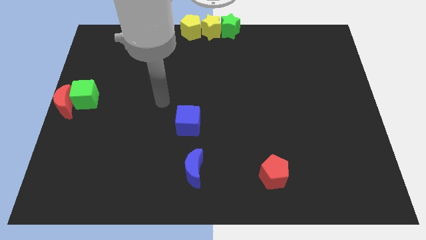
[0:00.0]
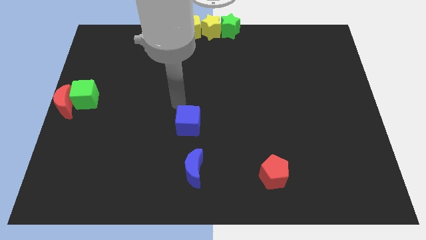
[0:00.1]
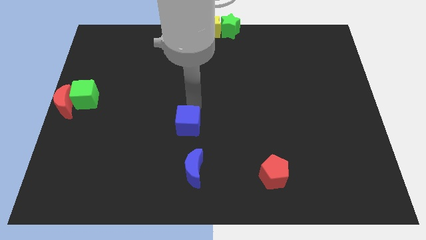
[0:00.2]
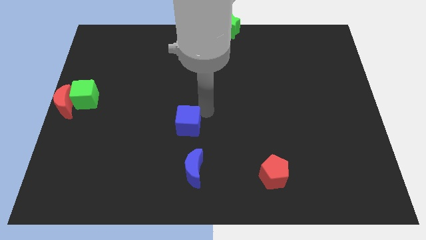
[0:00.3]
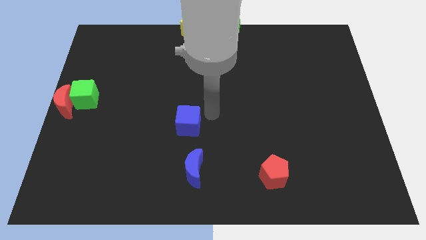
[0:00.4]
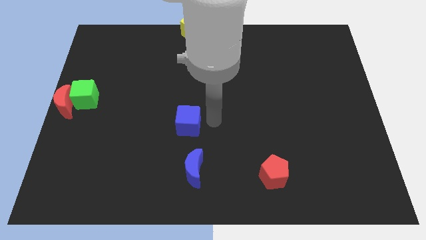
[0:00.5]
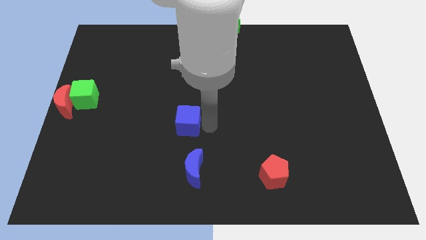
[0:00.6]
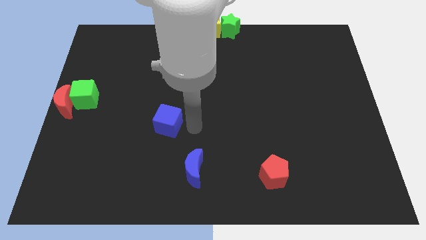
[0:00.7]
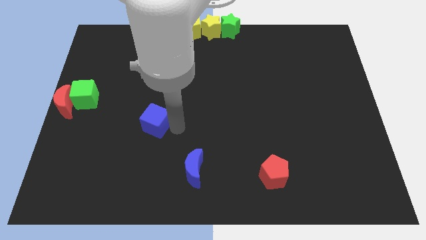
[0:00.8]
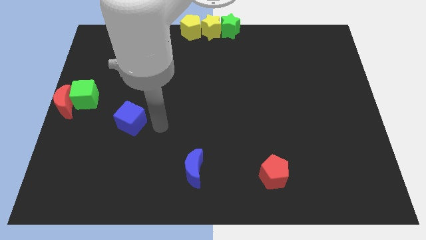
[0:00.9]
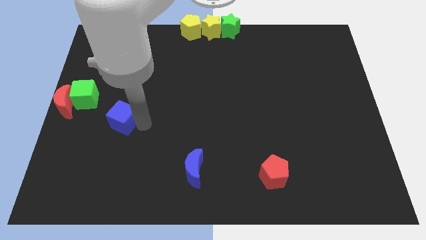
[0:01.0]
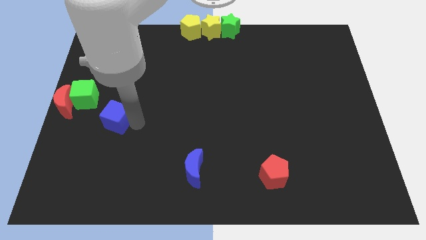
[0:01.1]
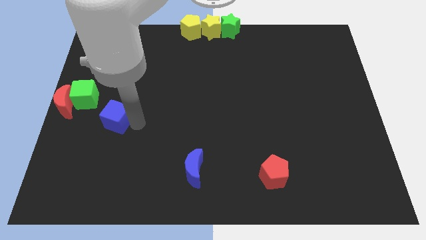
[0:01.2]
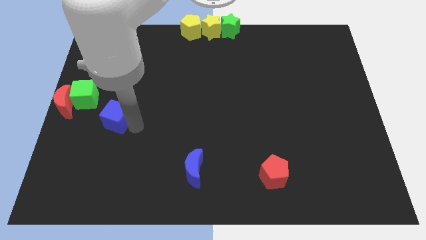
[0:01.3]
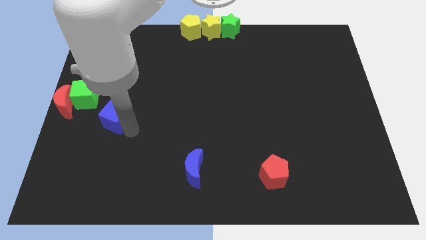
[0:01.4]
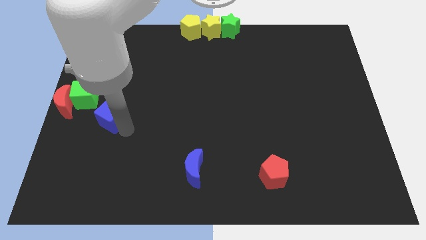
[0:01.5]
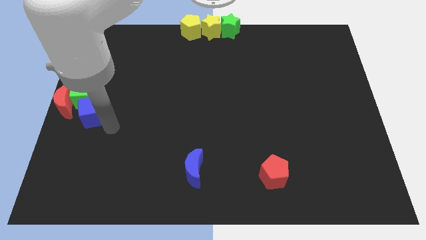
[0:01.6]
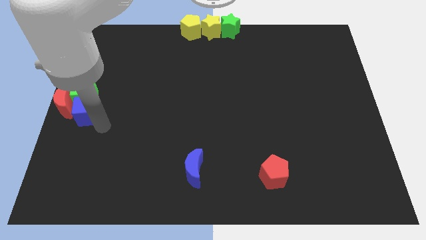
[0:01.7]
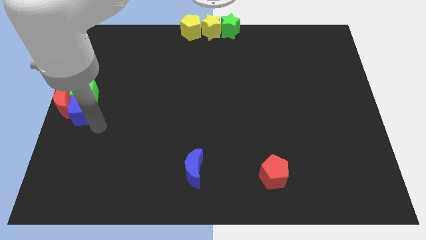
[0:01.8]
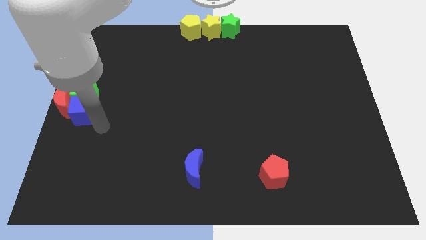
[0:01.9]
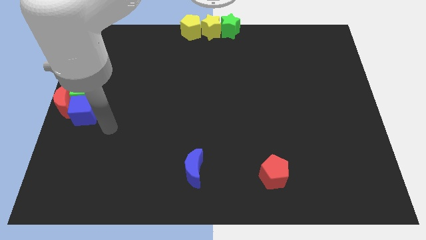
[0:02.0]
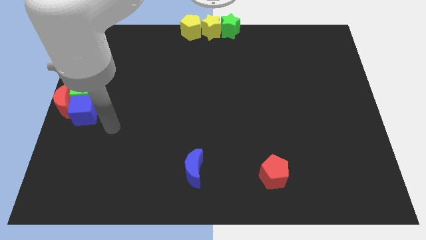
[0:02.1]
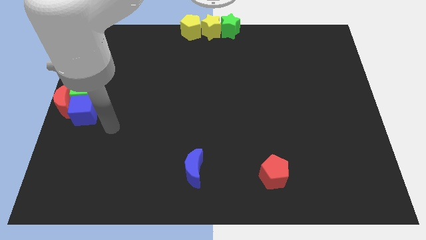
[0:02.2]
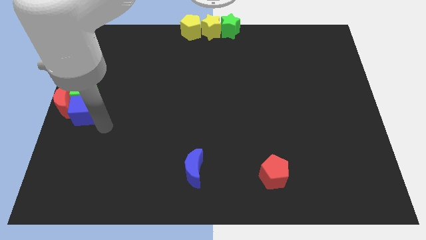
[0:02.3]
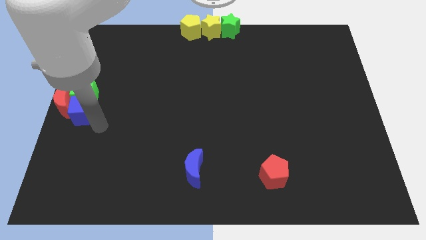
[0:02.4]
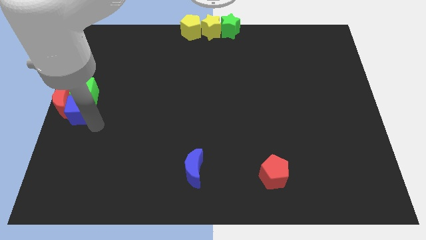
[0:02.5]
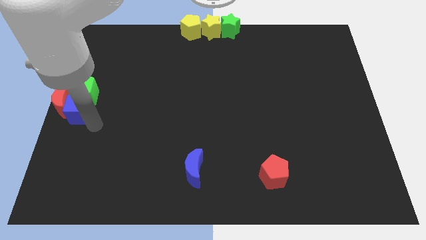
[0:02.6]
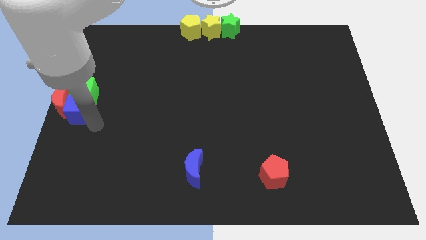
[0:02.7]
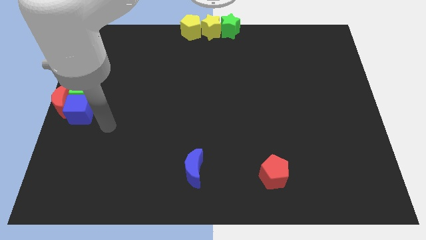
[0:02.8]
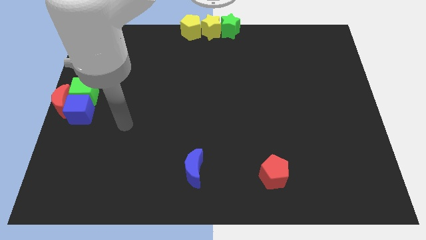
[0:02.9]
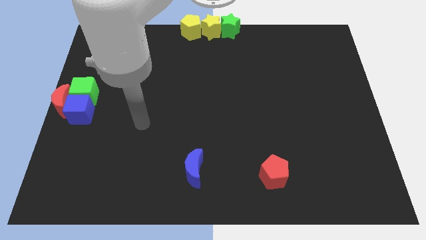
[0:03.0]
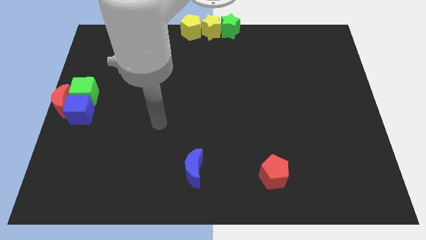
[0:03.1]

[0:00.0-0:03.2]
move the blue cube bottom to the green cube

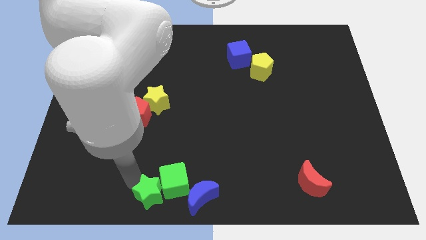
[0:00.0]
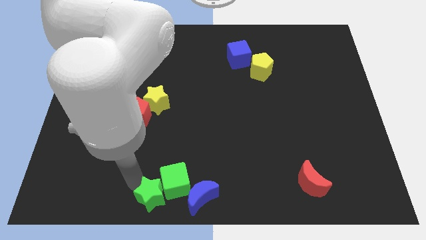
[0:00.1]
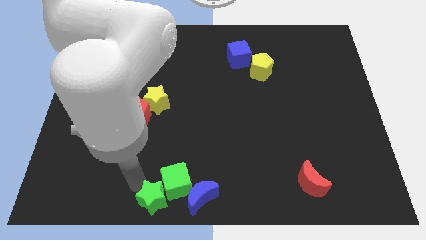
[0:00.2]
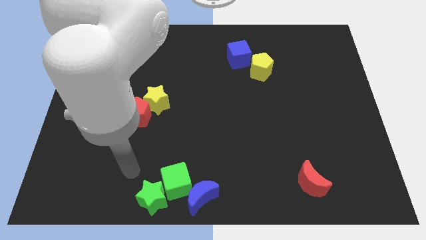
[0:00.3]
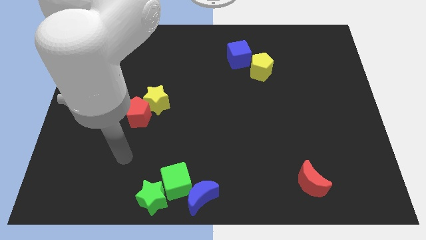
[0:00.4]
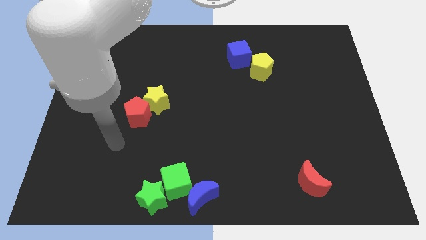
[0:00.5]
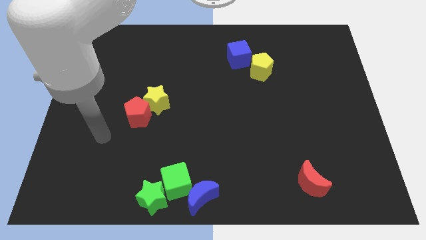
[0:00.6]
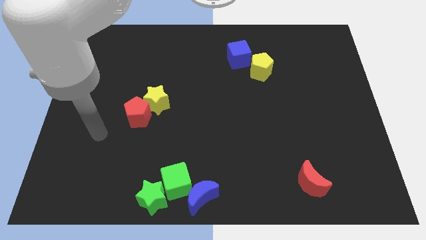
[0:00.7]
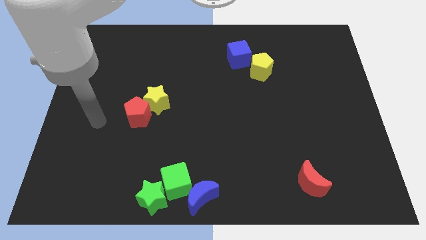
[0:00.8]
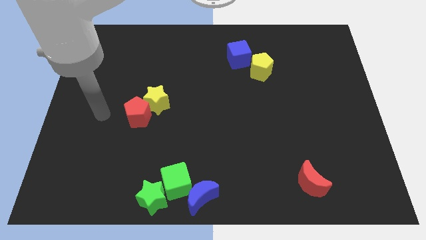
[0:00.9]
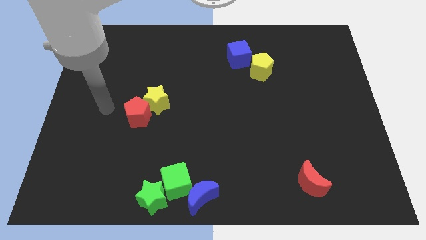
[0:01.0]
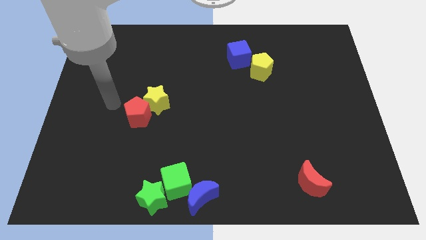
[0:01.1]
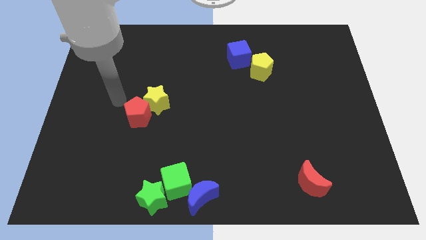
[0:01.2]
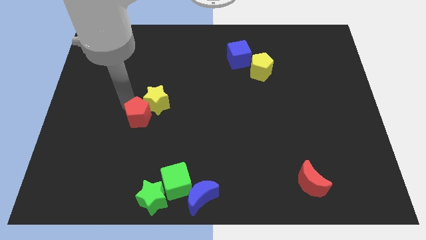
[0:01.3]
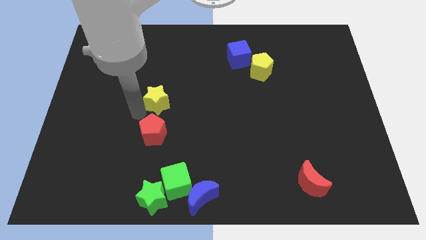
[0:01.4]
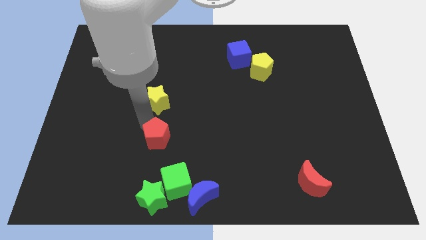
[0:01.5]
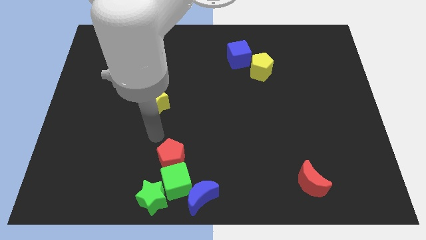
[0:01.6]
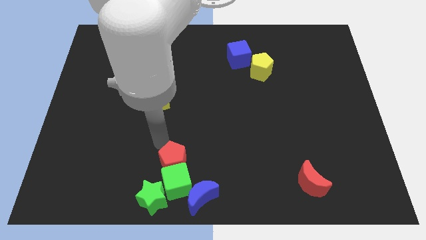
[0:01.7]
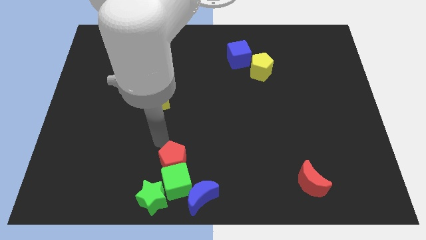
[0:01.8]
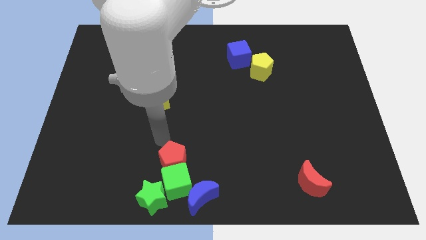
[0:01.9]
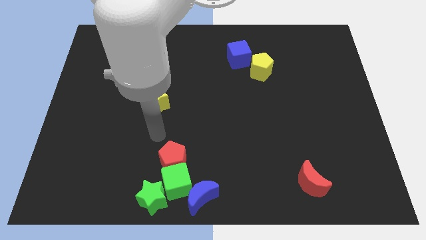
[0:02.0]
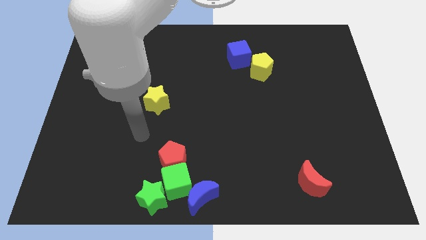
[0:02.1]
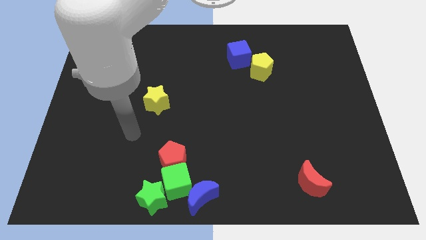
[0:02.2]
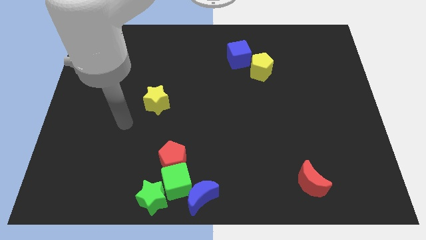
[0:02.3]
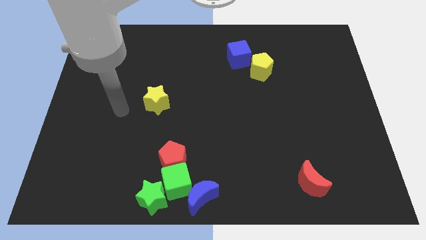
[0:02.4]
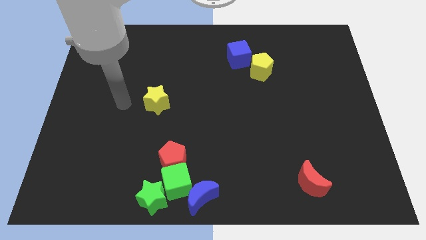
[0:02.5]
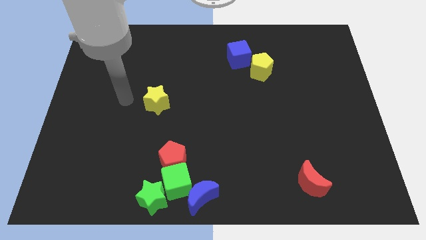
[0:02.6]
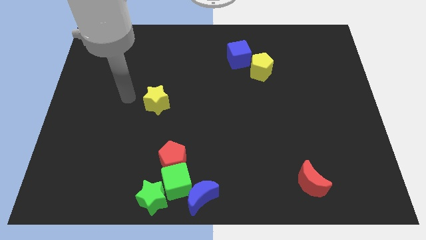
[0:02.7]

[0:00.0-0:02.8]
move the arm away from the green cube

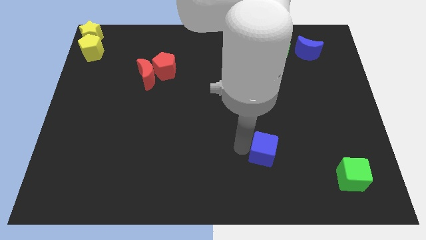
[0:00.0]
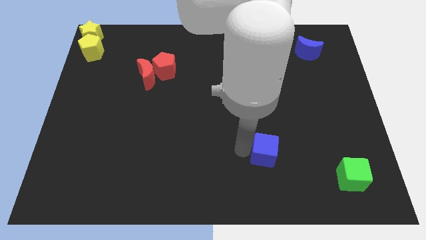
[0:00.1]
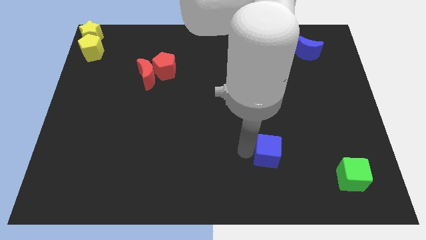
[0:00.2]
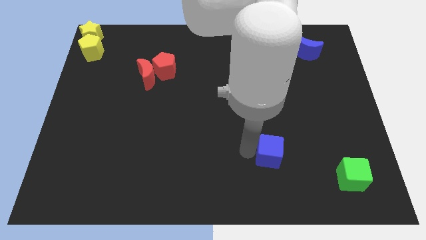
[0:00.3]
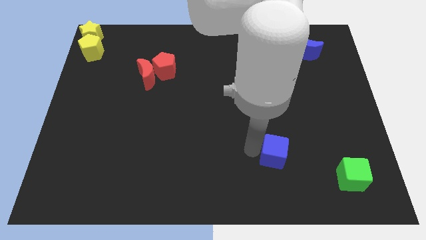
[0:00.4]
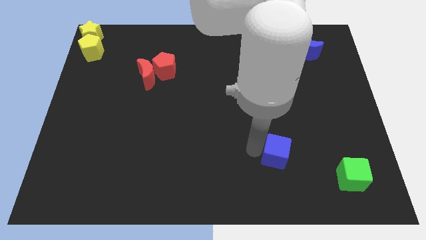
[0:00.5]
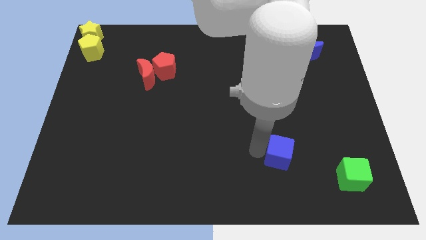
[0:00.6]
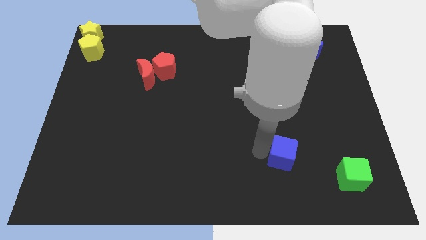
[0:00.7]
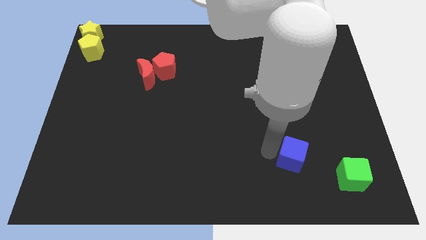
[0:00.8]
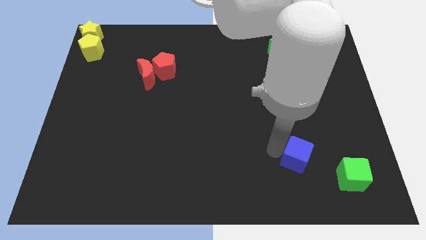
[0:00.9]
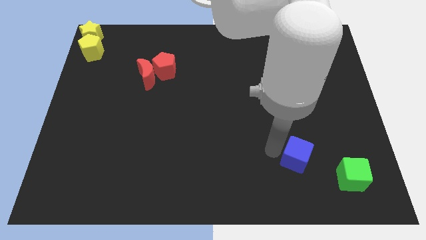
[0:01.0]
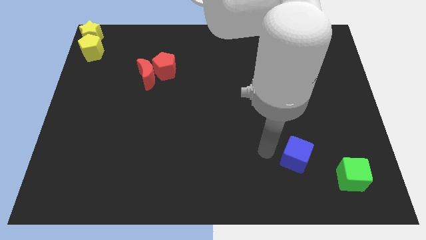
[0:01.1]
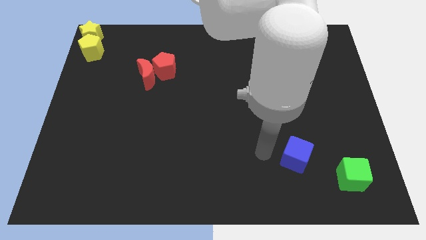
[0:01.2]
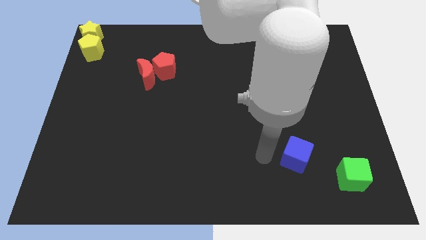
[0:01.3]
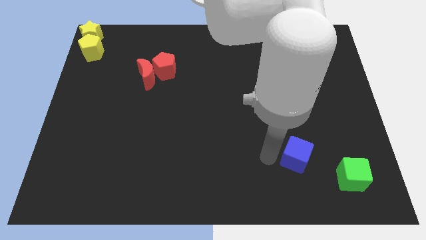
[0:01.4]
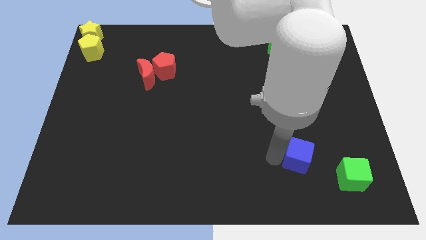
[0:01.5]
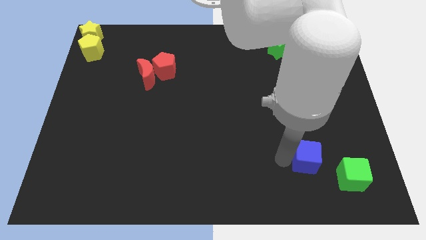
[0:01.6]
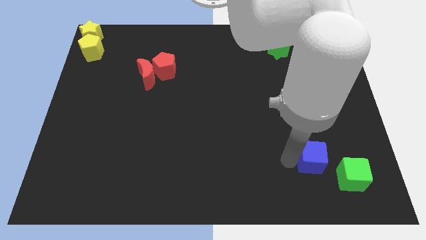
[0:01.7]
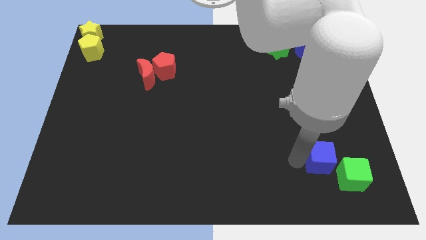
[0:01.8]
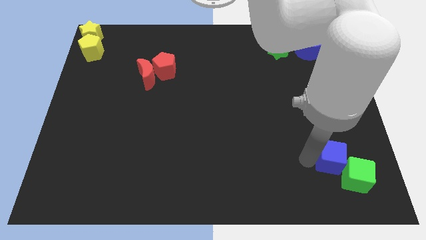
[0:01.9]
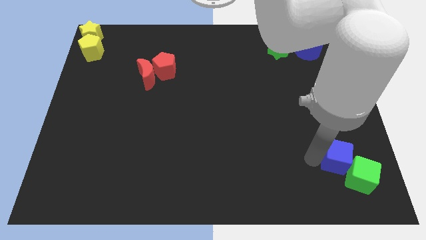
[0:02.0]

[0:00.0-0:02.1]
move the blue cube close to the green cube

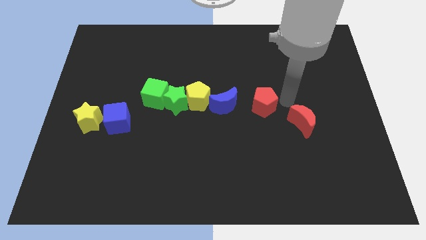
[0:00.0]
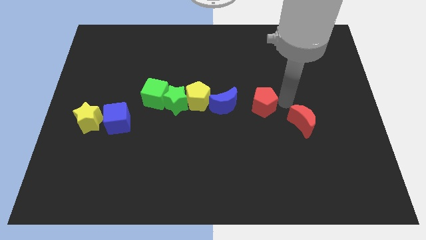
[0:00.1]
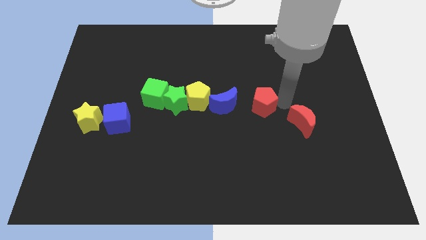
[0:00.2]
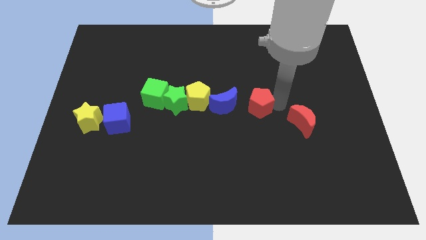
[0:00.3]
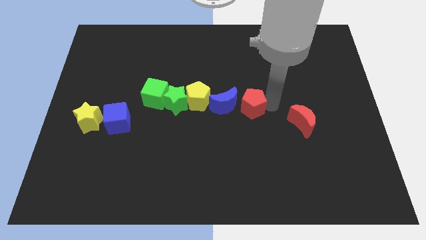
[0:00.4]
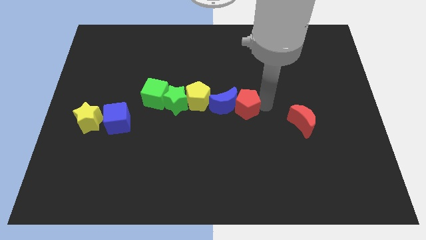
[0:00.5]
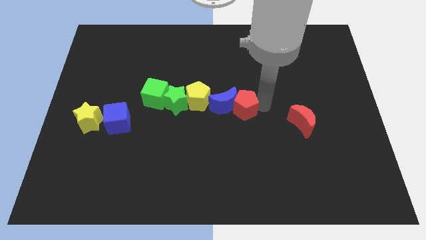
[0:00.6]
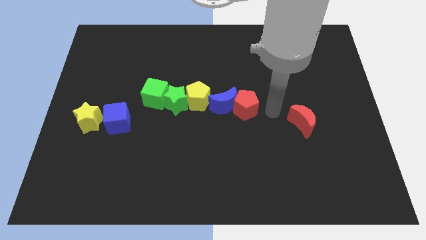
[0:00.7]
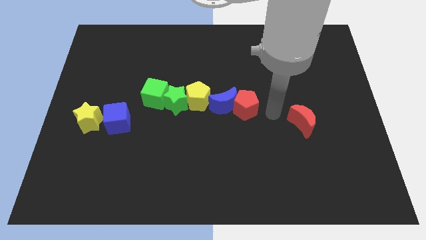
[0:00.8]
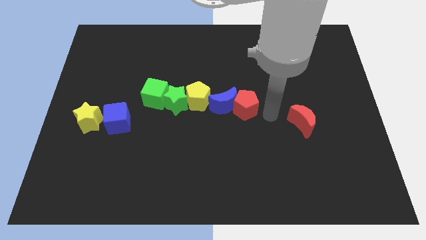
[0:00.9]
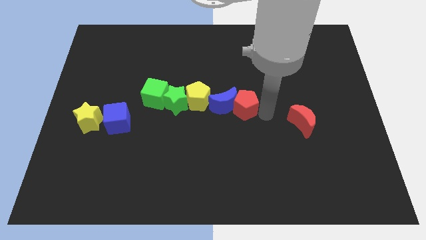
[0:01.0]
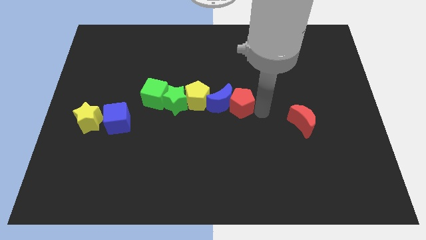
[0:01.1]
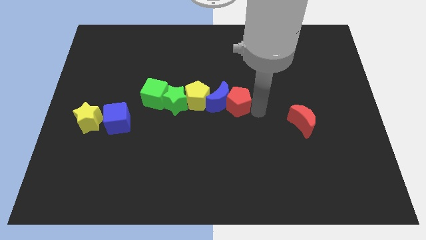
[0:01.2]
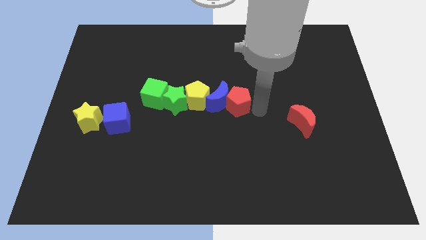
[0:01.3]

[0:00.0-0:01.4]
push the red pentagon into blue crescent
